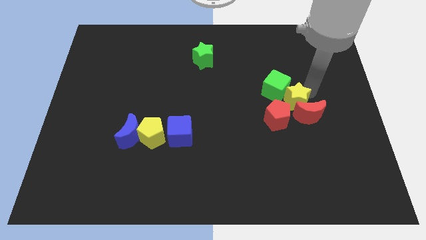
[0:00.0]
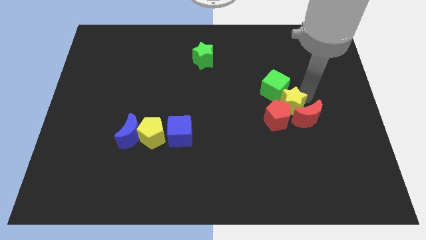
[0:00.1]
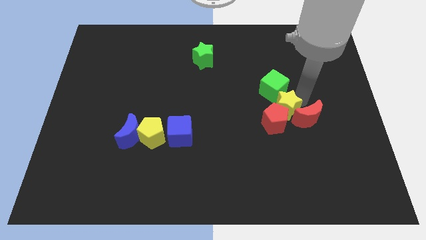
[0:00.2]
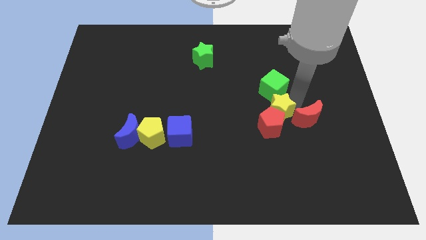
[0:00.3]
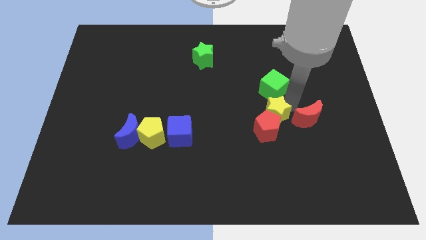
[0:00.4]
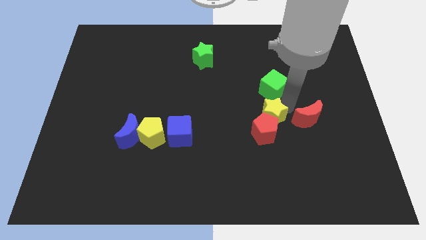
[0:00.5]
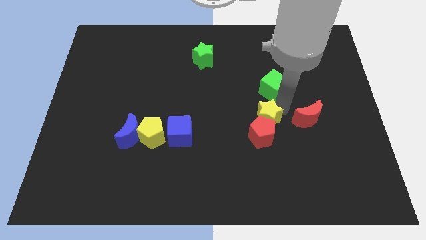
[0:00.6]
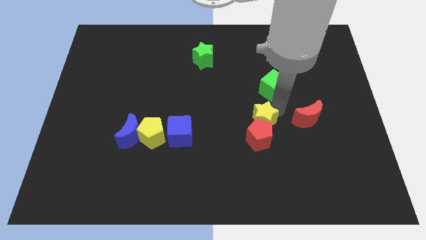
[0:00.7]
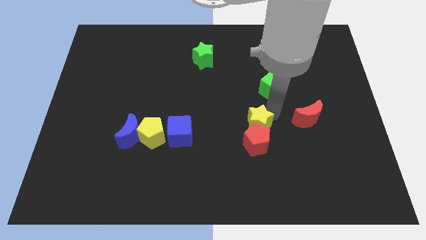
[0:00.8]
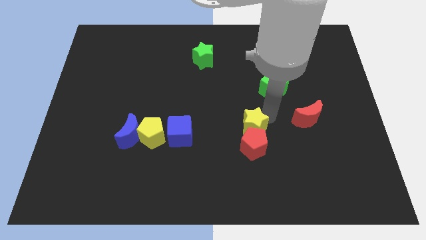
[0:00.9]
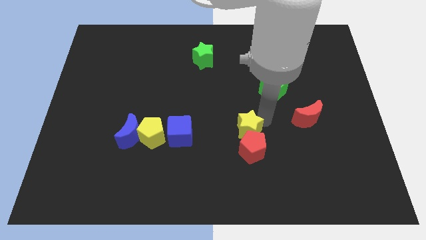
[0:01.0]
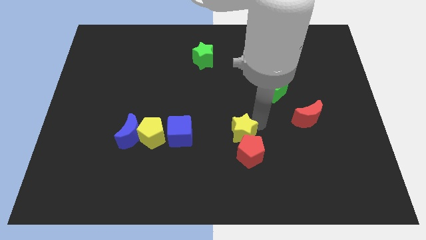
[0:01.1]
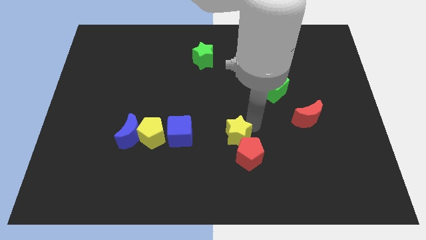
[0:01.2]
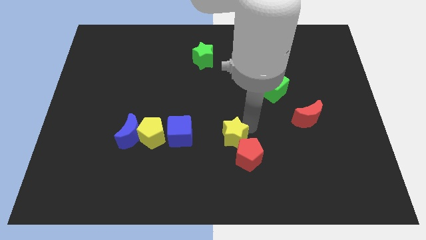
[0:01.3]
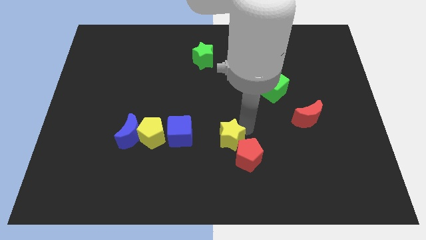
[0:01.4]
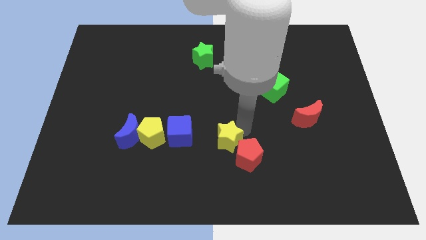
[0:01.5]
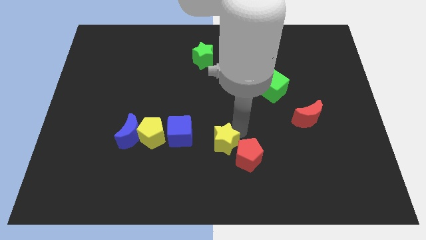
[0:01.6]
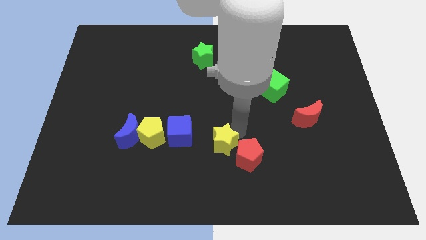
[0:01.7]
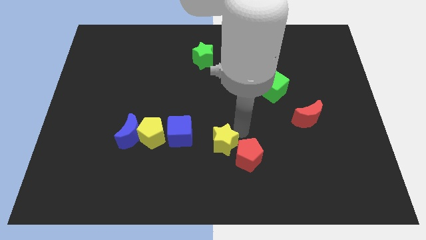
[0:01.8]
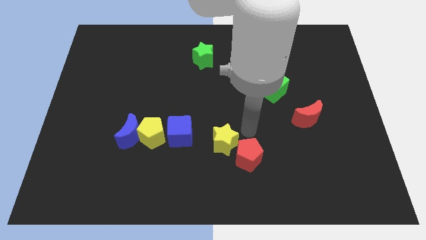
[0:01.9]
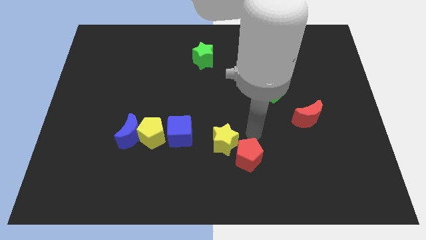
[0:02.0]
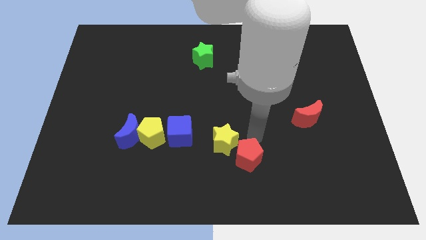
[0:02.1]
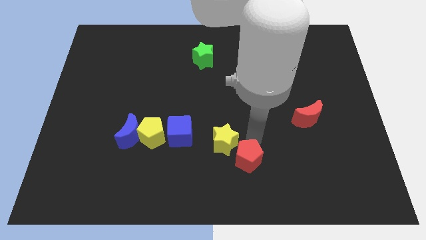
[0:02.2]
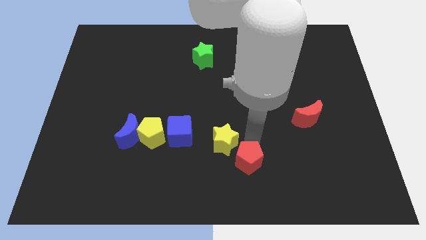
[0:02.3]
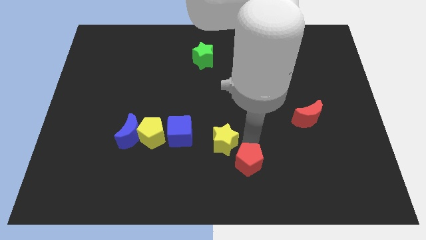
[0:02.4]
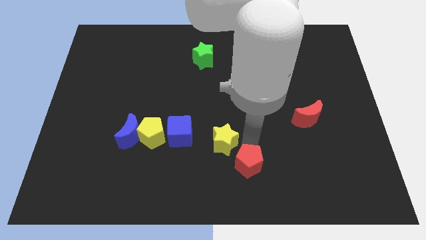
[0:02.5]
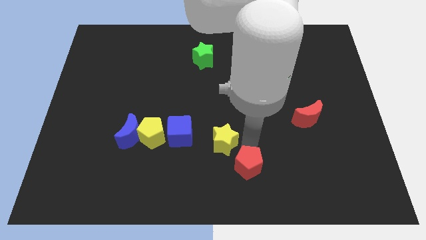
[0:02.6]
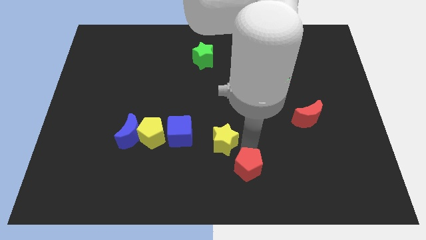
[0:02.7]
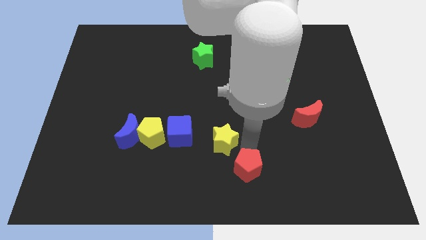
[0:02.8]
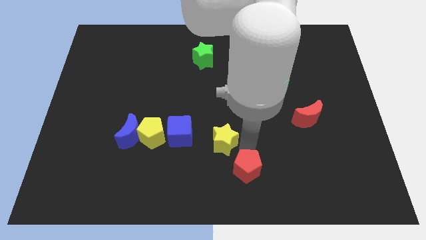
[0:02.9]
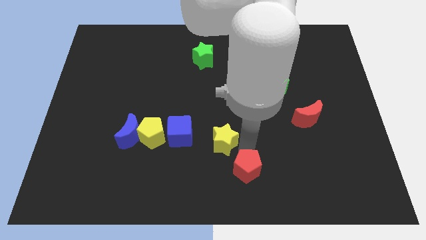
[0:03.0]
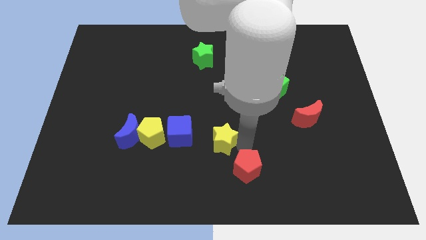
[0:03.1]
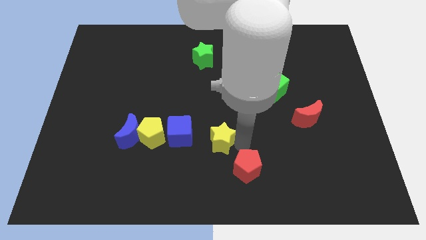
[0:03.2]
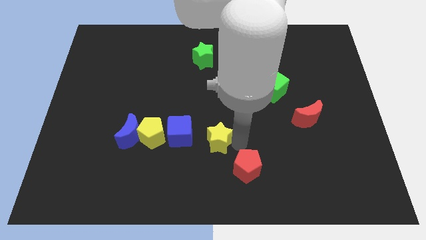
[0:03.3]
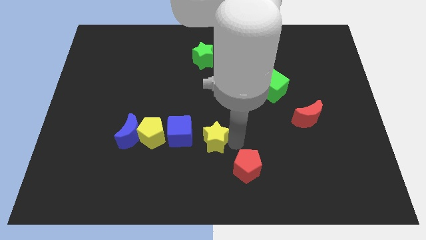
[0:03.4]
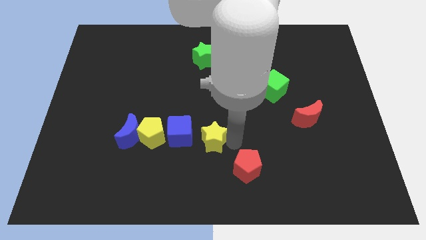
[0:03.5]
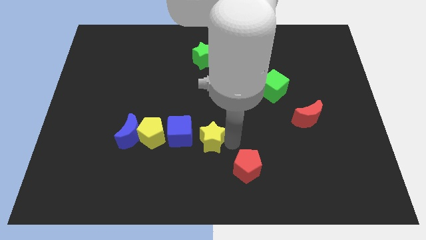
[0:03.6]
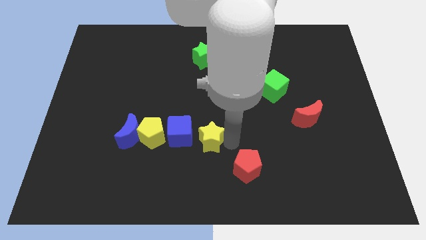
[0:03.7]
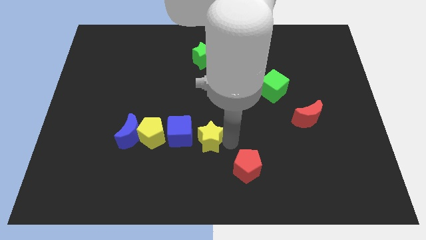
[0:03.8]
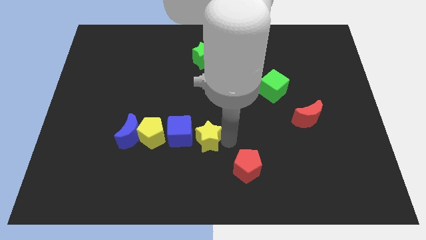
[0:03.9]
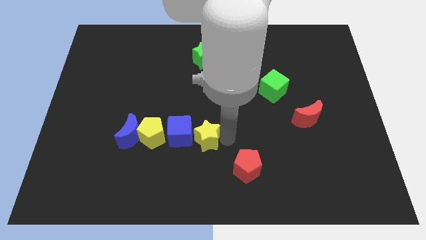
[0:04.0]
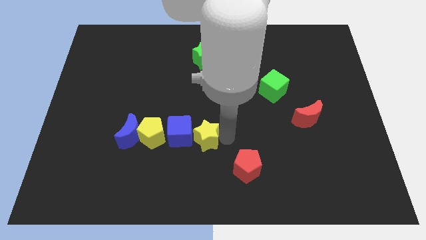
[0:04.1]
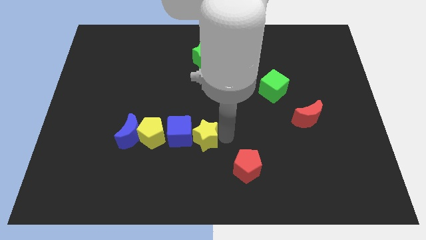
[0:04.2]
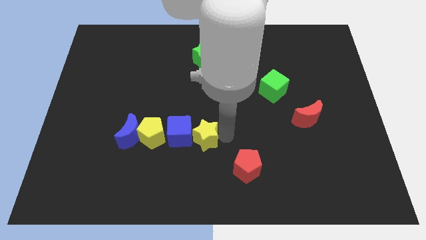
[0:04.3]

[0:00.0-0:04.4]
place yellow star to the right of blue cube

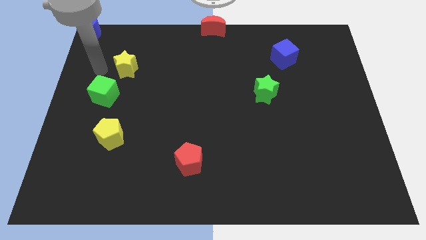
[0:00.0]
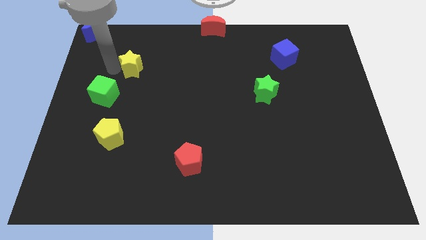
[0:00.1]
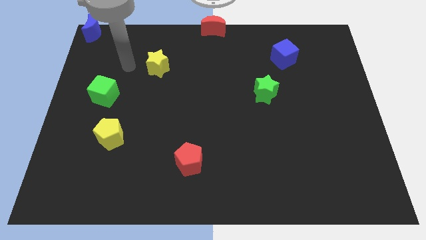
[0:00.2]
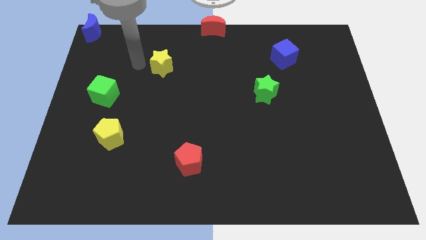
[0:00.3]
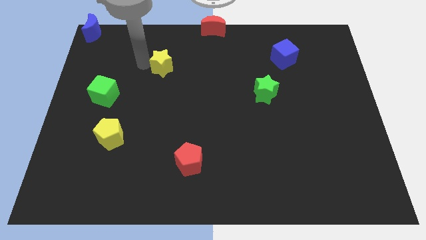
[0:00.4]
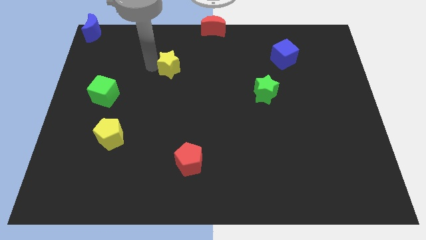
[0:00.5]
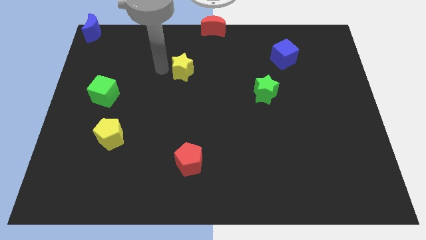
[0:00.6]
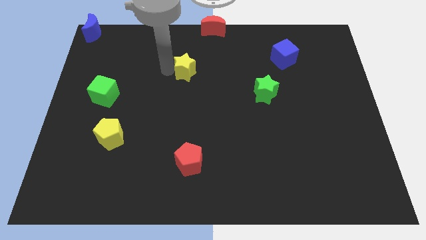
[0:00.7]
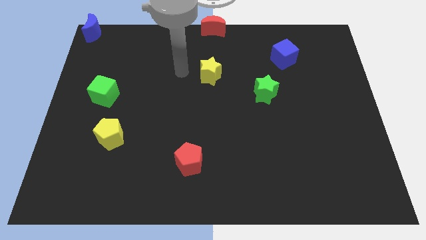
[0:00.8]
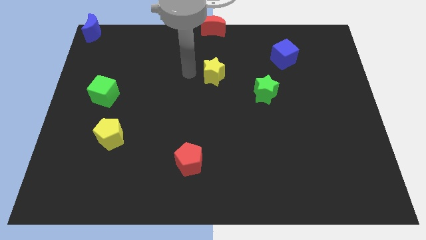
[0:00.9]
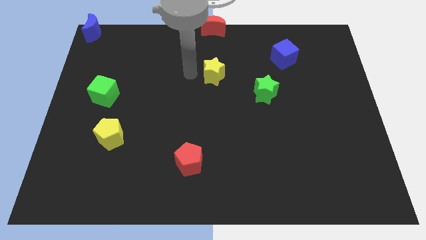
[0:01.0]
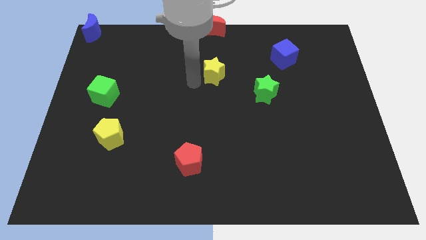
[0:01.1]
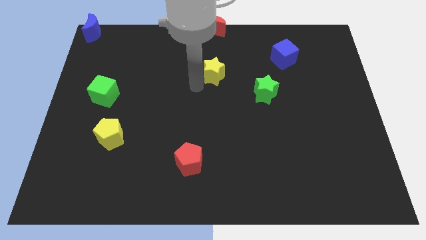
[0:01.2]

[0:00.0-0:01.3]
move the yellow star parallel to the bottom of the red crescent

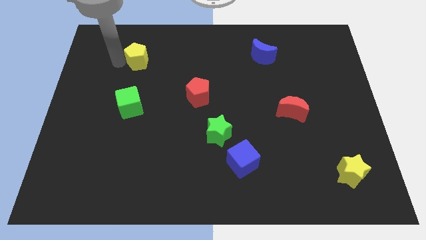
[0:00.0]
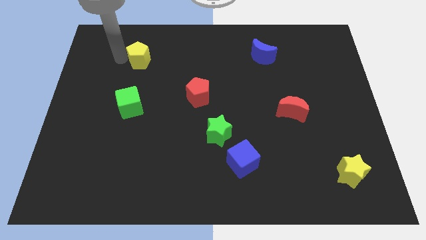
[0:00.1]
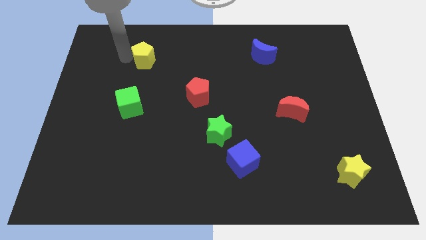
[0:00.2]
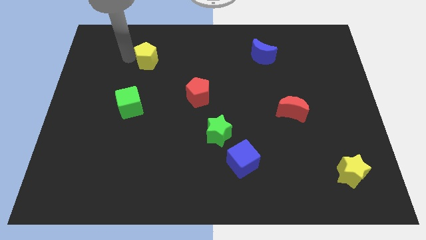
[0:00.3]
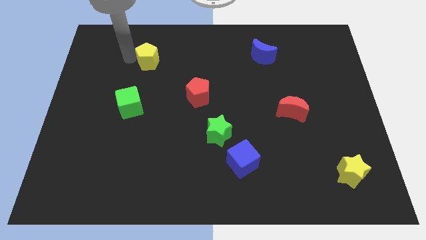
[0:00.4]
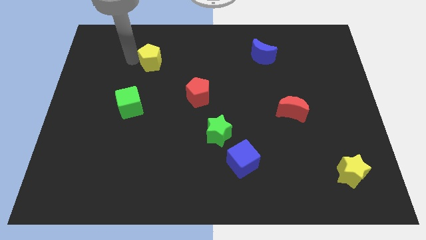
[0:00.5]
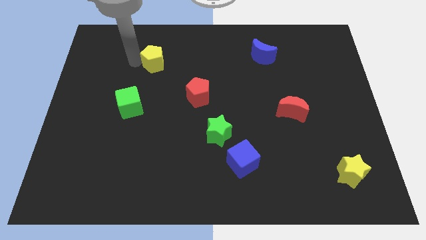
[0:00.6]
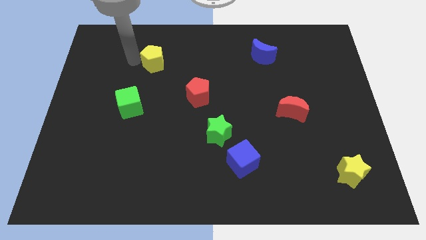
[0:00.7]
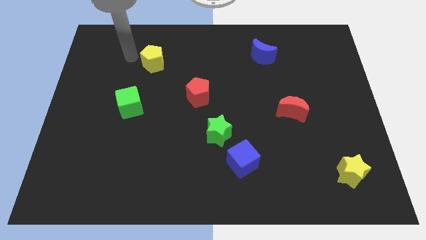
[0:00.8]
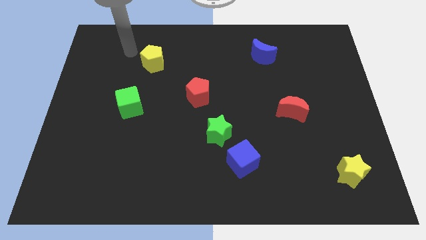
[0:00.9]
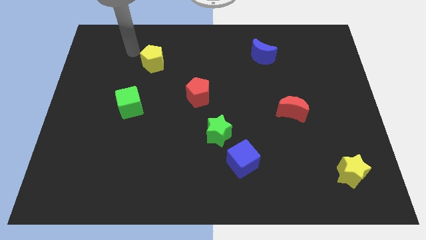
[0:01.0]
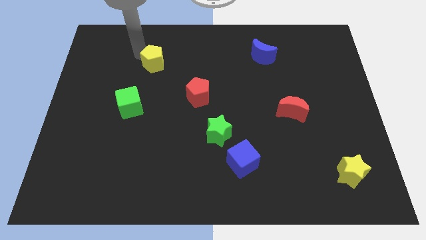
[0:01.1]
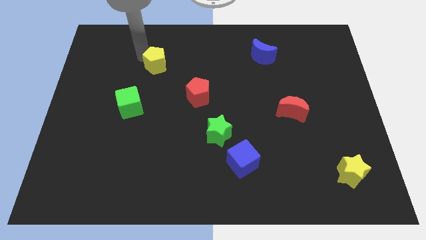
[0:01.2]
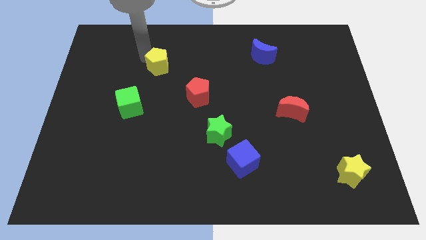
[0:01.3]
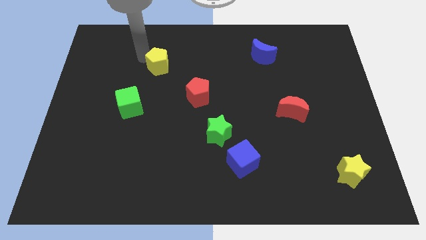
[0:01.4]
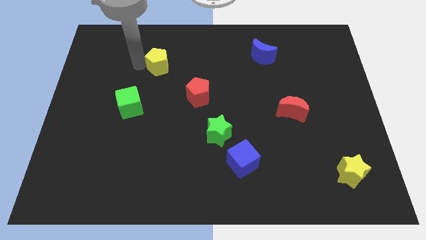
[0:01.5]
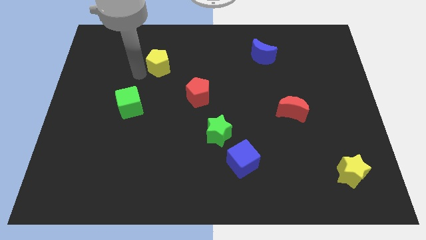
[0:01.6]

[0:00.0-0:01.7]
place the yellow pentagon at the center top of the green cube and red pentagon

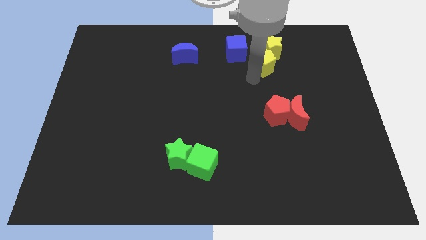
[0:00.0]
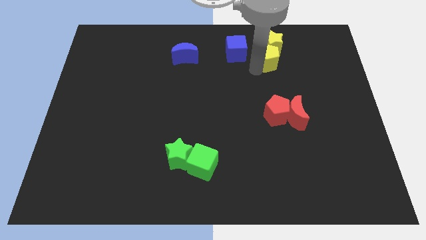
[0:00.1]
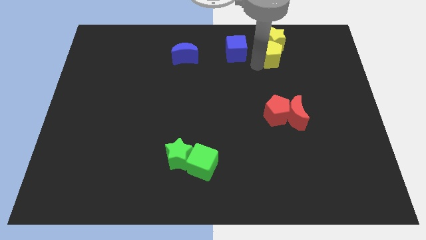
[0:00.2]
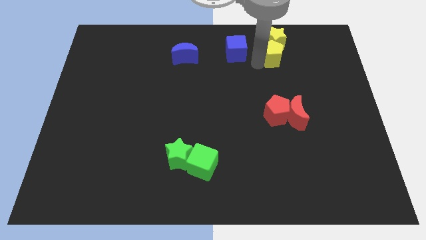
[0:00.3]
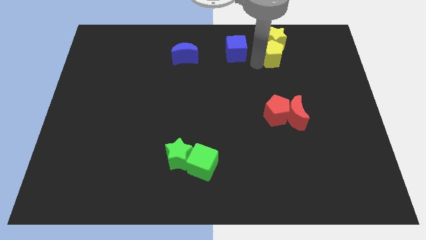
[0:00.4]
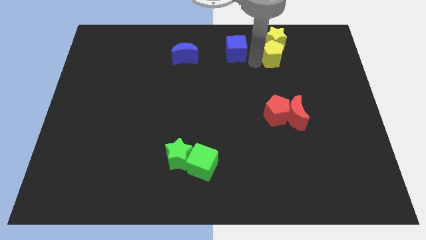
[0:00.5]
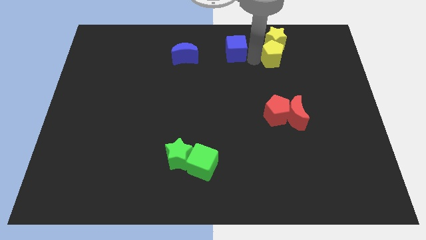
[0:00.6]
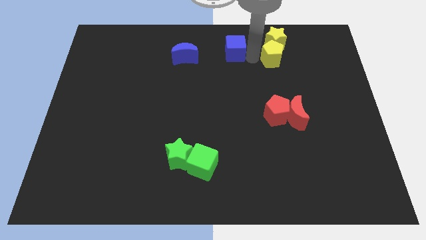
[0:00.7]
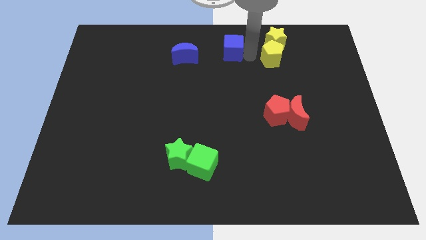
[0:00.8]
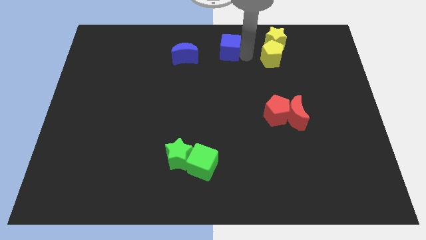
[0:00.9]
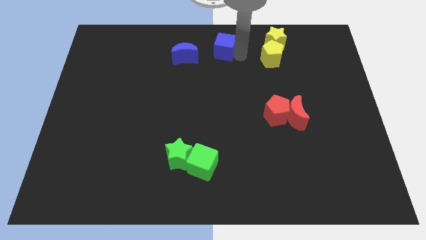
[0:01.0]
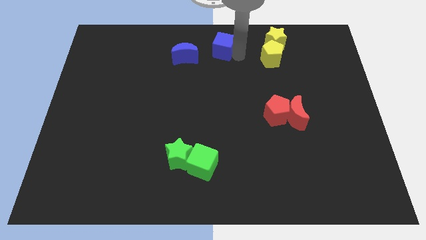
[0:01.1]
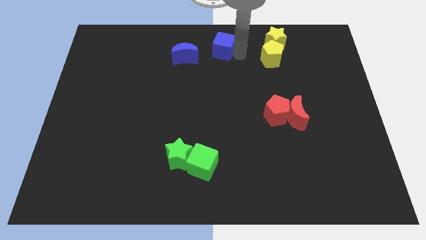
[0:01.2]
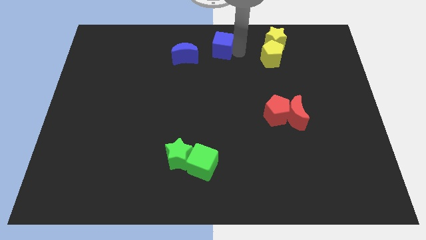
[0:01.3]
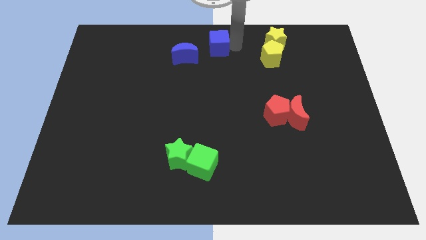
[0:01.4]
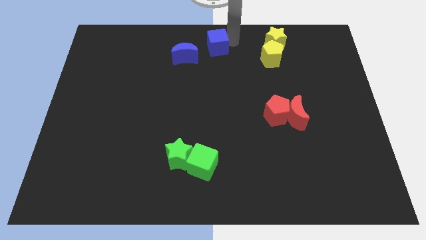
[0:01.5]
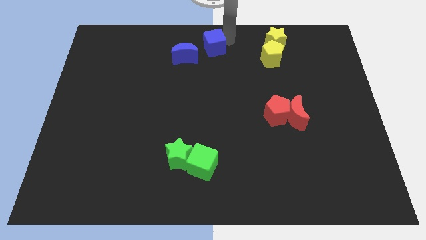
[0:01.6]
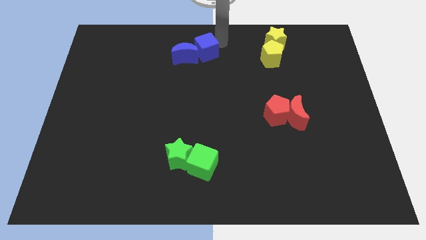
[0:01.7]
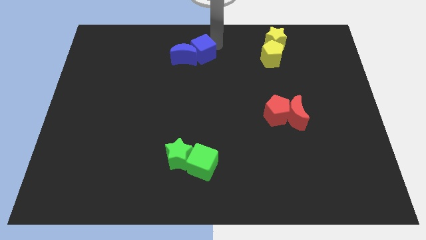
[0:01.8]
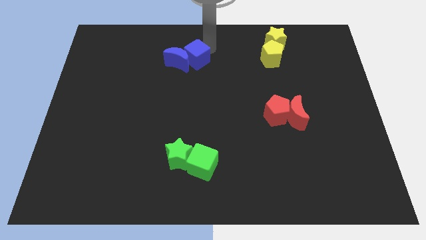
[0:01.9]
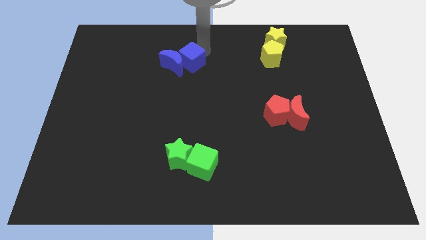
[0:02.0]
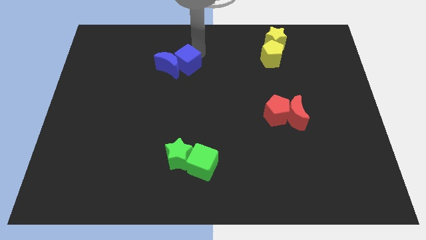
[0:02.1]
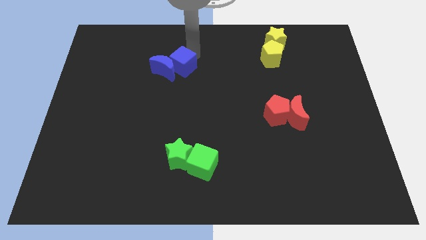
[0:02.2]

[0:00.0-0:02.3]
push the blue cube into the blue crescent
